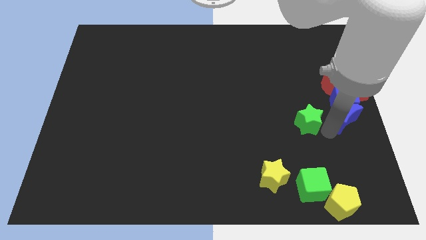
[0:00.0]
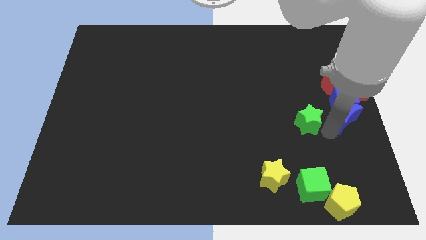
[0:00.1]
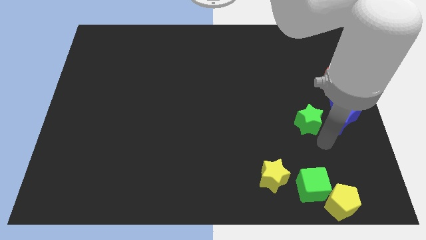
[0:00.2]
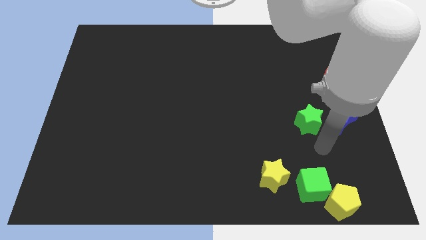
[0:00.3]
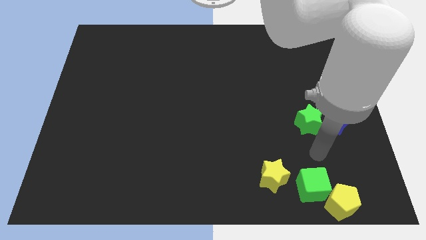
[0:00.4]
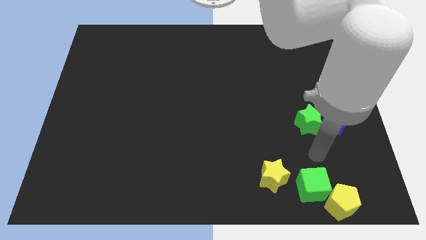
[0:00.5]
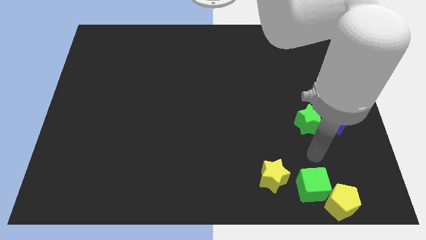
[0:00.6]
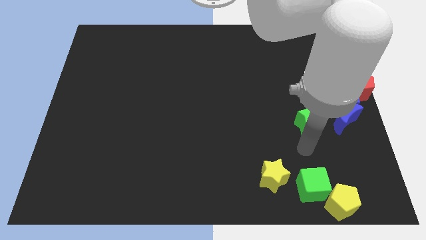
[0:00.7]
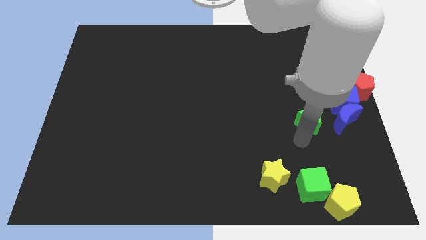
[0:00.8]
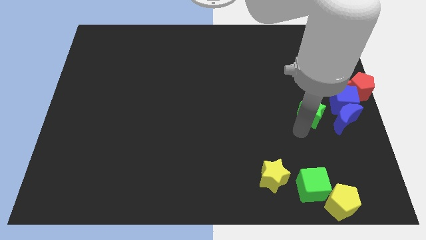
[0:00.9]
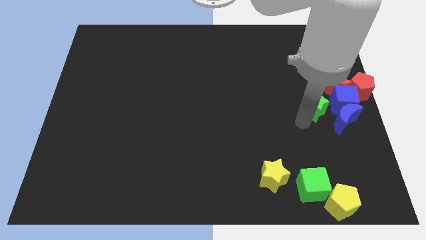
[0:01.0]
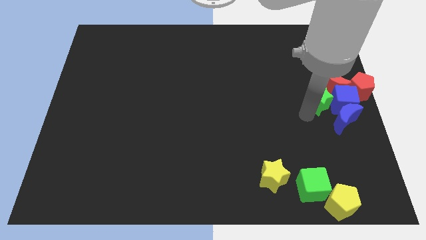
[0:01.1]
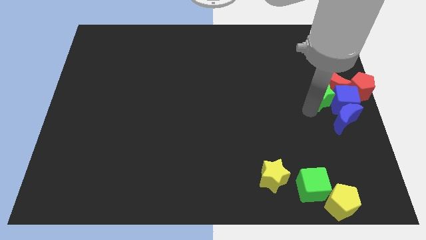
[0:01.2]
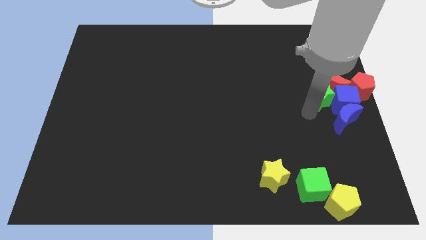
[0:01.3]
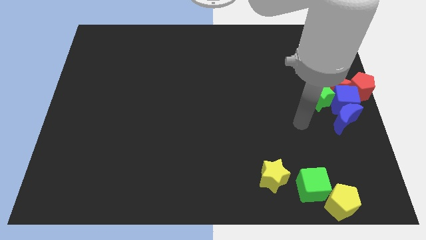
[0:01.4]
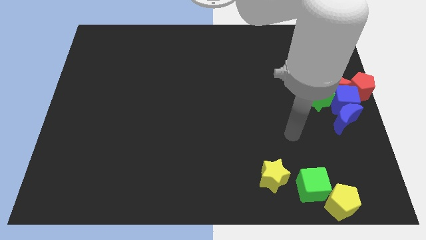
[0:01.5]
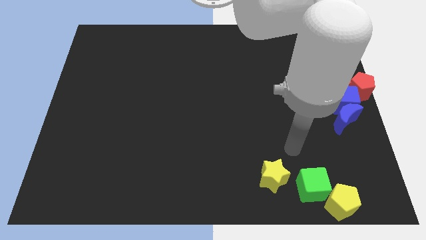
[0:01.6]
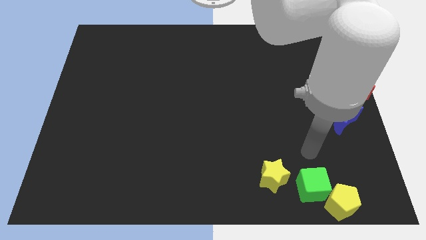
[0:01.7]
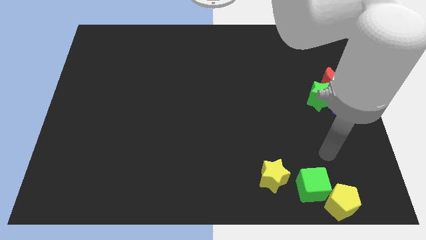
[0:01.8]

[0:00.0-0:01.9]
put the green star on the left side of the blue cube

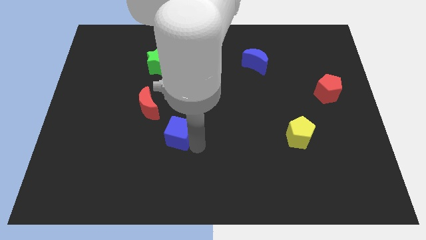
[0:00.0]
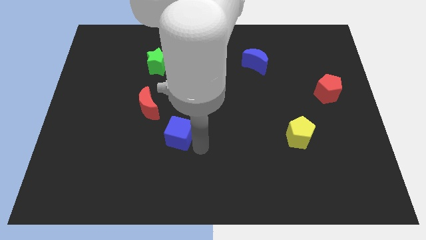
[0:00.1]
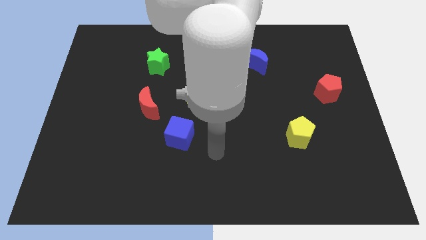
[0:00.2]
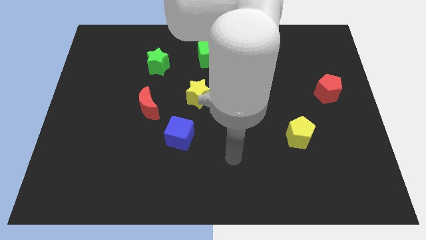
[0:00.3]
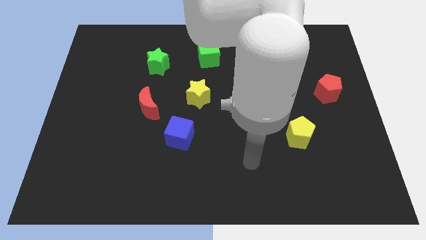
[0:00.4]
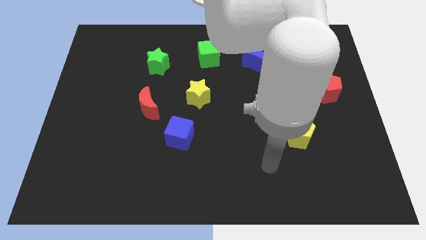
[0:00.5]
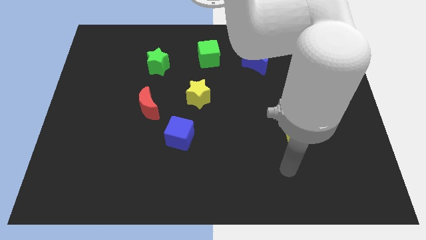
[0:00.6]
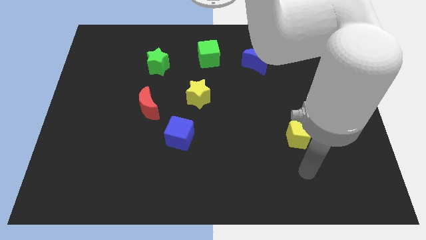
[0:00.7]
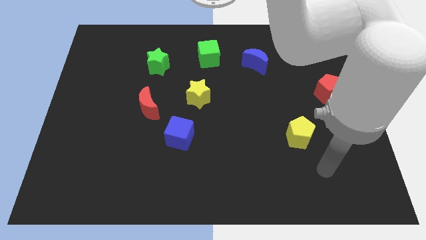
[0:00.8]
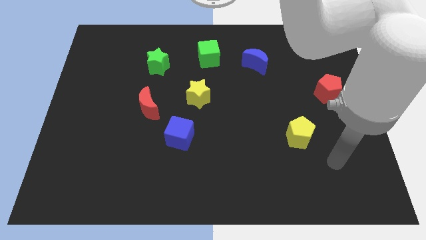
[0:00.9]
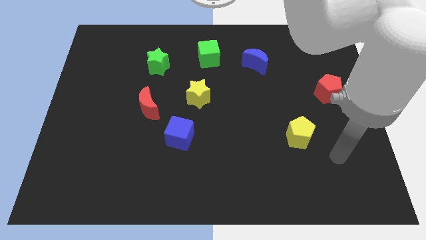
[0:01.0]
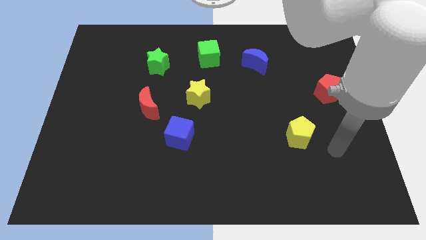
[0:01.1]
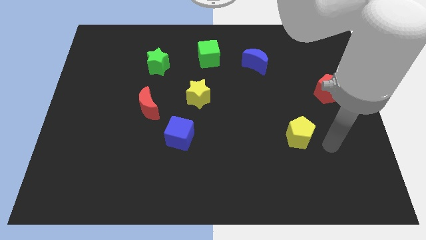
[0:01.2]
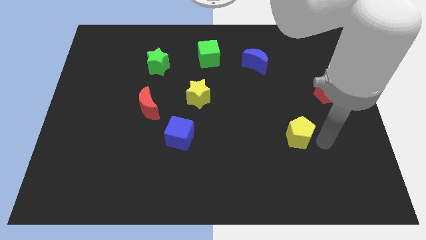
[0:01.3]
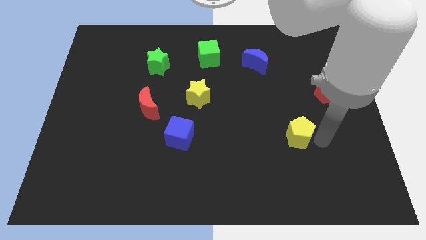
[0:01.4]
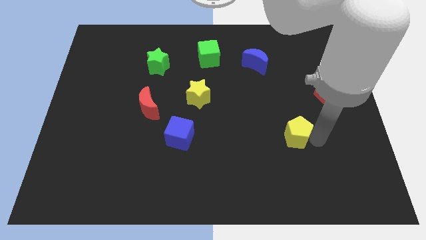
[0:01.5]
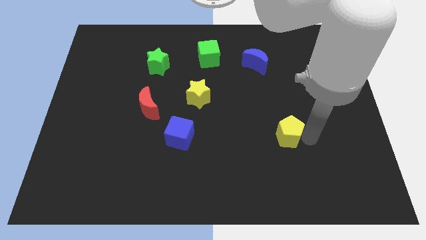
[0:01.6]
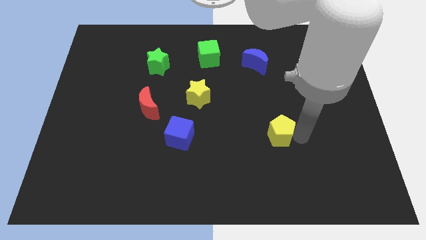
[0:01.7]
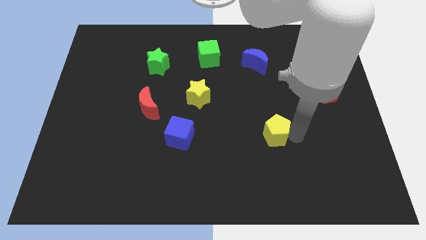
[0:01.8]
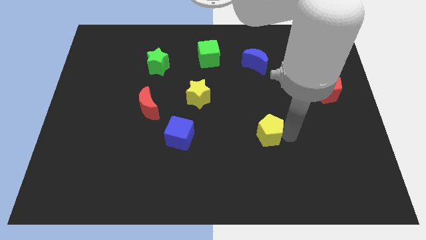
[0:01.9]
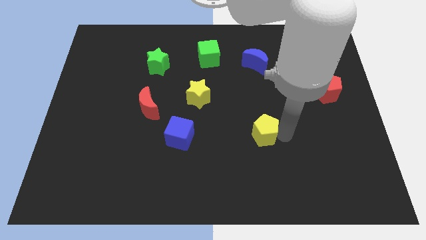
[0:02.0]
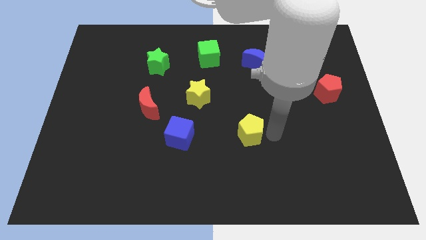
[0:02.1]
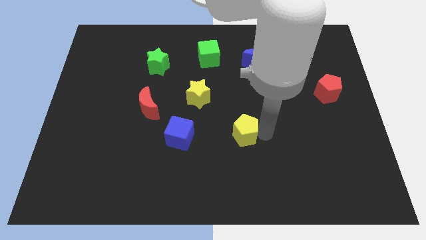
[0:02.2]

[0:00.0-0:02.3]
push the yellow pentagon slightly to the left

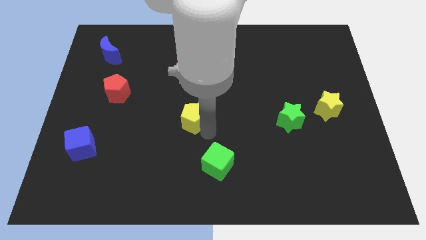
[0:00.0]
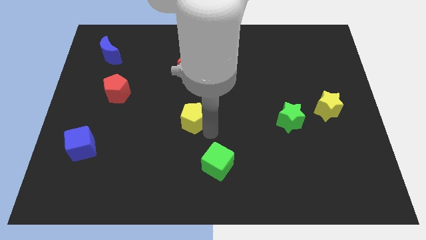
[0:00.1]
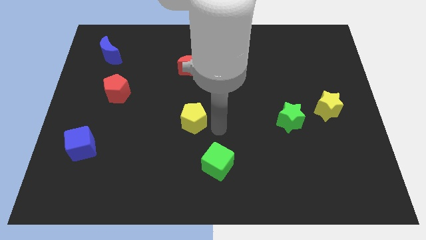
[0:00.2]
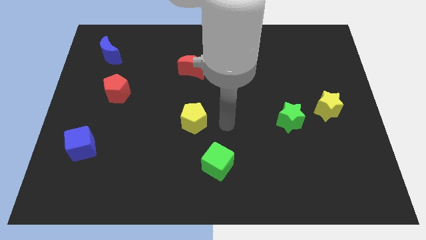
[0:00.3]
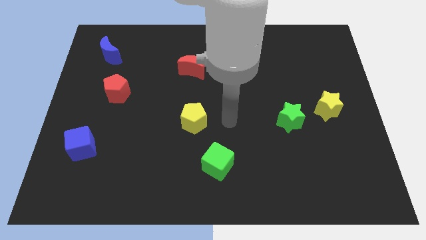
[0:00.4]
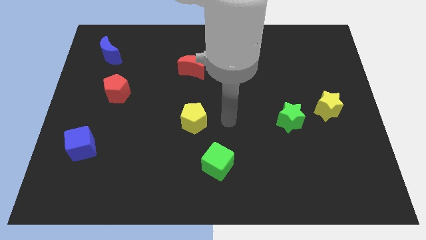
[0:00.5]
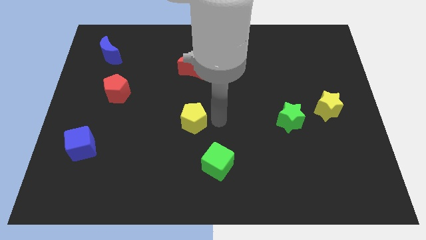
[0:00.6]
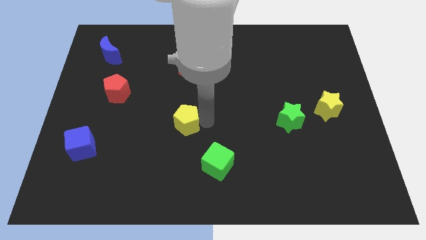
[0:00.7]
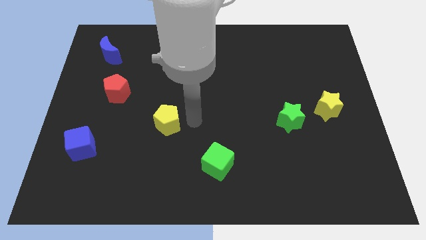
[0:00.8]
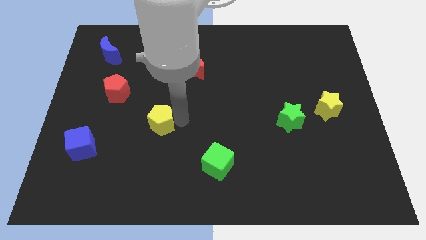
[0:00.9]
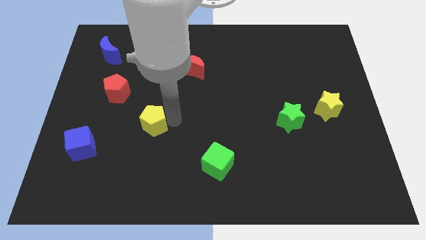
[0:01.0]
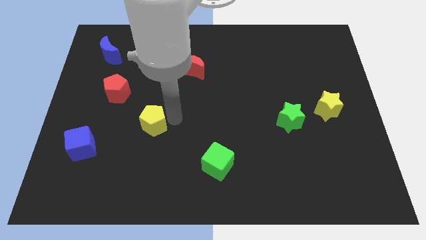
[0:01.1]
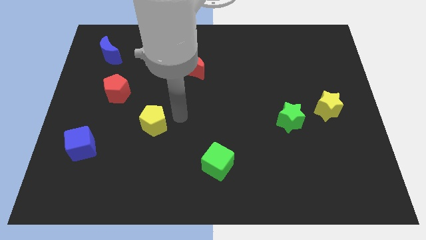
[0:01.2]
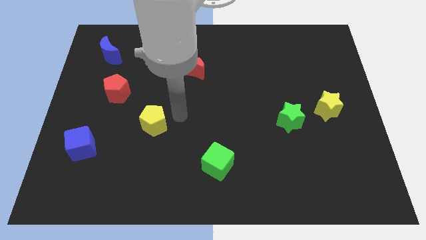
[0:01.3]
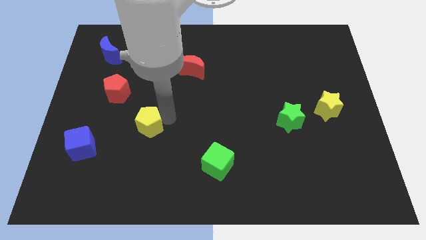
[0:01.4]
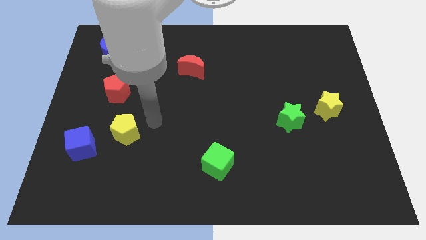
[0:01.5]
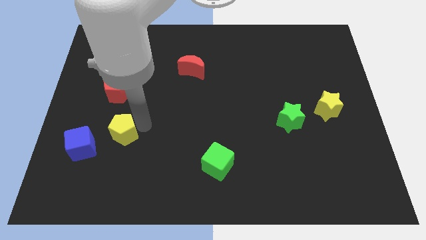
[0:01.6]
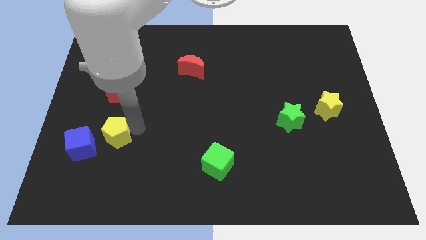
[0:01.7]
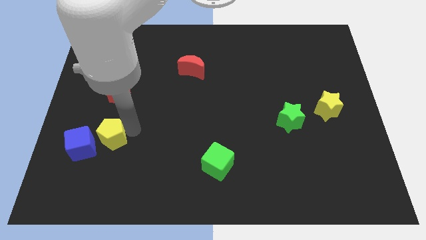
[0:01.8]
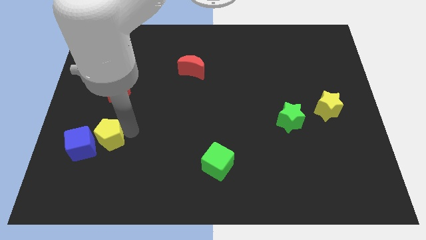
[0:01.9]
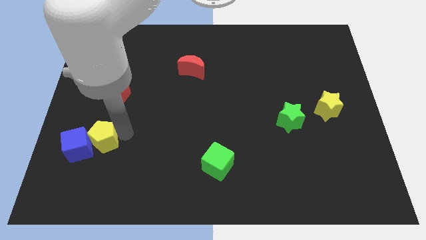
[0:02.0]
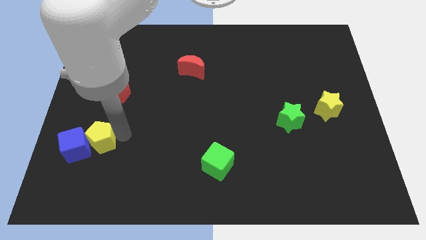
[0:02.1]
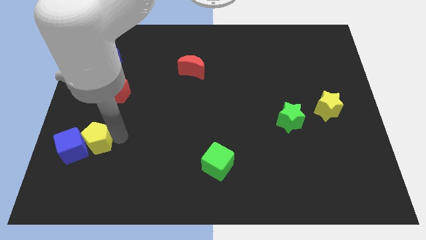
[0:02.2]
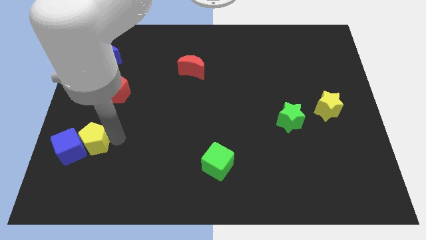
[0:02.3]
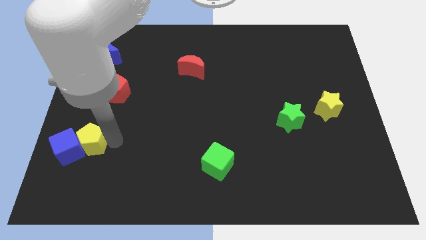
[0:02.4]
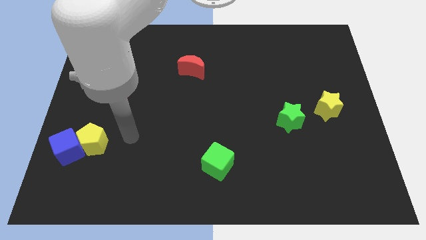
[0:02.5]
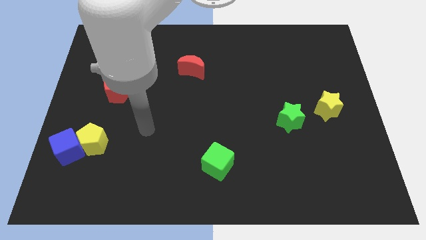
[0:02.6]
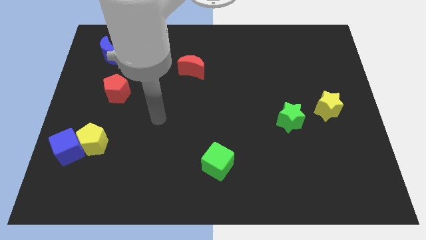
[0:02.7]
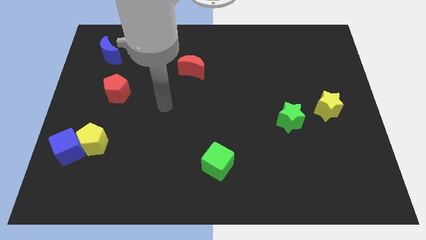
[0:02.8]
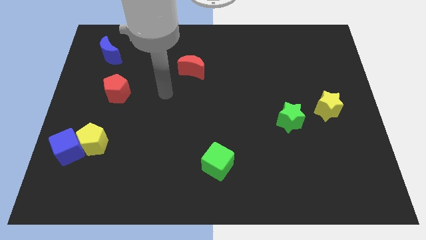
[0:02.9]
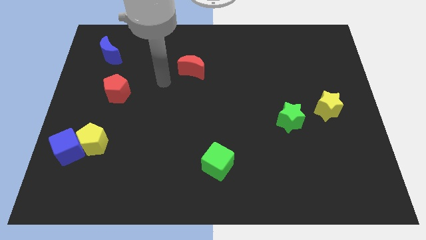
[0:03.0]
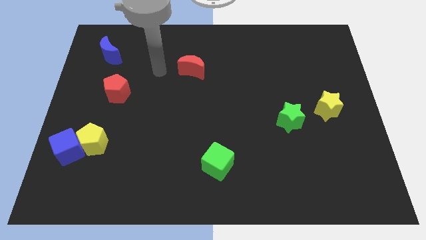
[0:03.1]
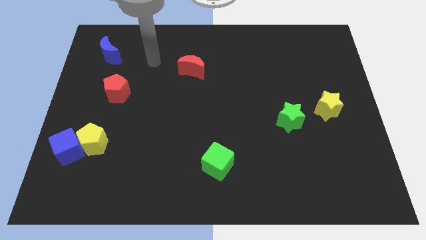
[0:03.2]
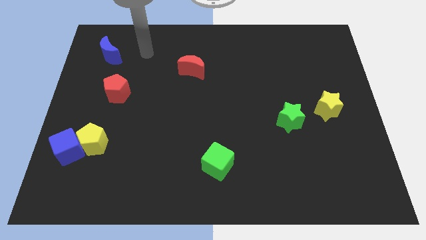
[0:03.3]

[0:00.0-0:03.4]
push yellow pentagon into blue cube

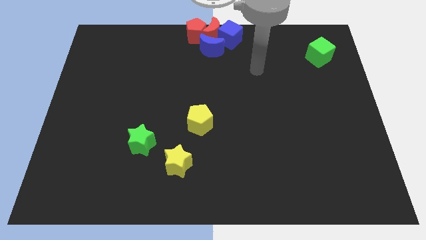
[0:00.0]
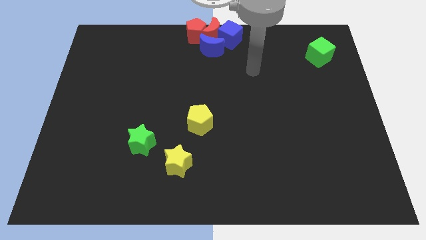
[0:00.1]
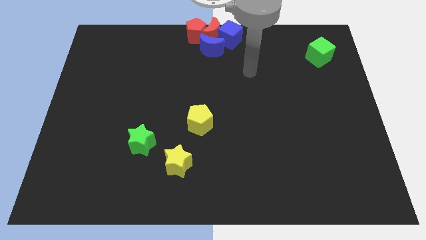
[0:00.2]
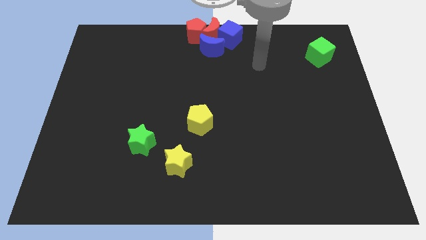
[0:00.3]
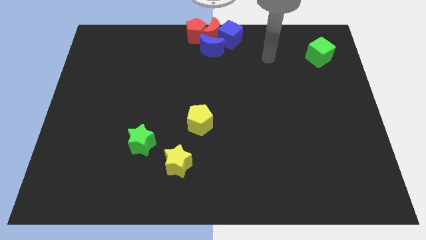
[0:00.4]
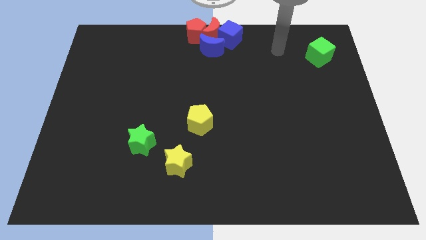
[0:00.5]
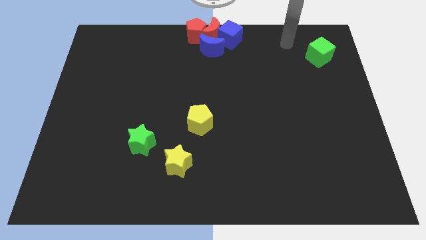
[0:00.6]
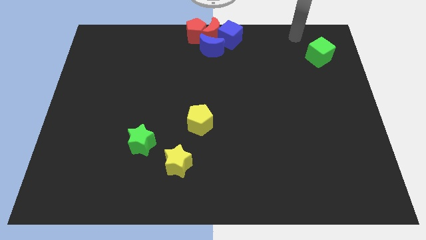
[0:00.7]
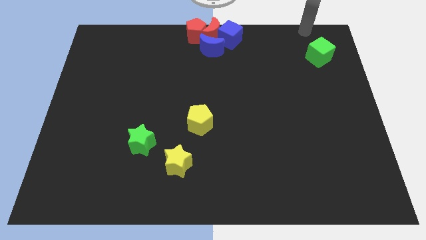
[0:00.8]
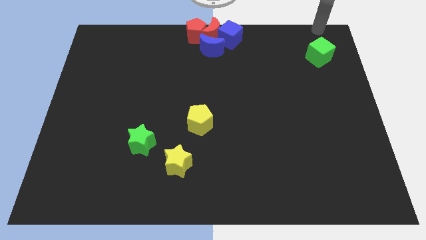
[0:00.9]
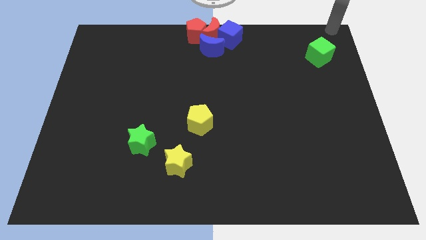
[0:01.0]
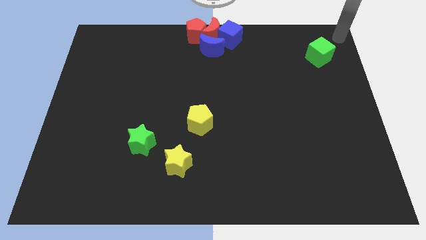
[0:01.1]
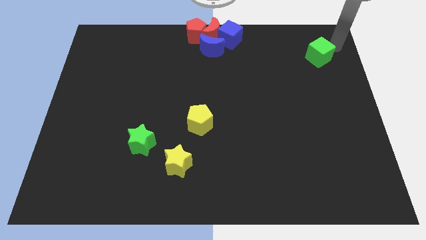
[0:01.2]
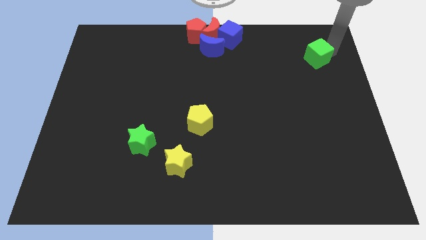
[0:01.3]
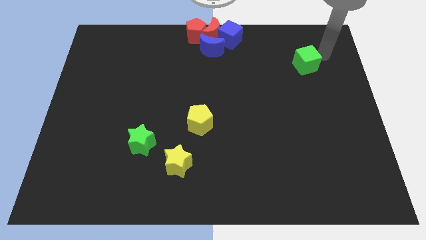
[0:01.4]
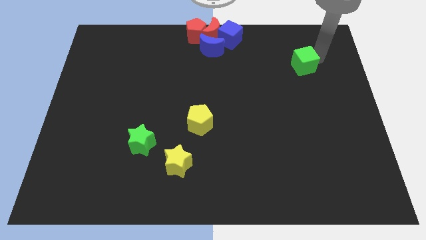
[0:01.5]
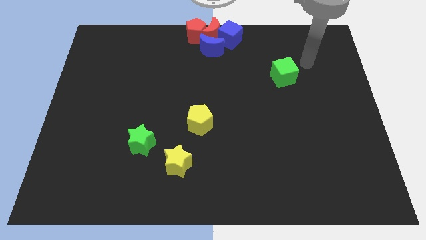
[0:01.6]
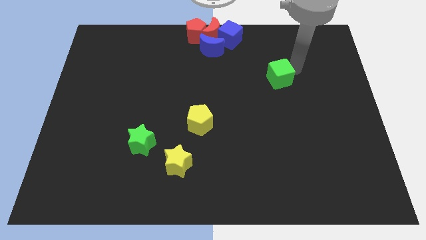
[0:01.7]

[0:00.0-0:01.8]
slide the green cube towards the center of the board
